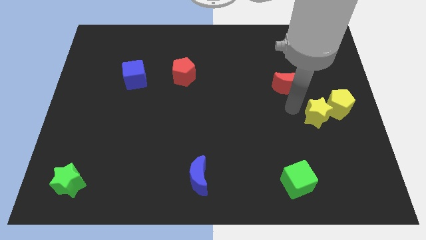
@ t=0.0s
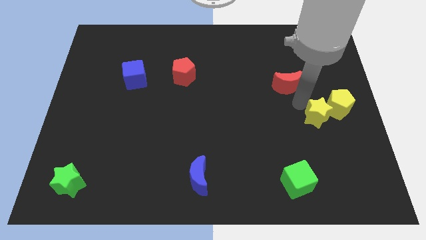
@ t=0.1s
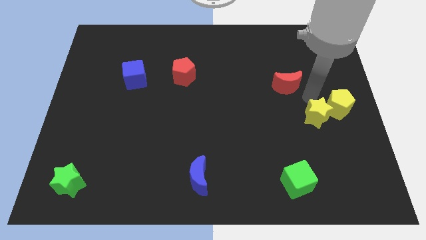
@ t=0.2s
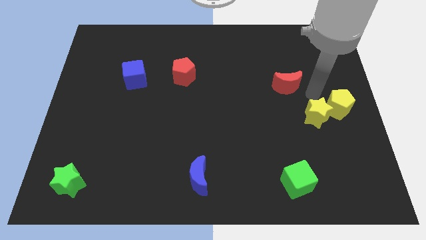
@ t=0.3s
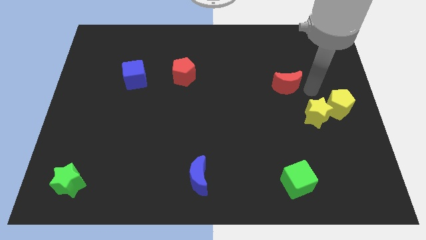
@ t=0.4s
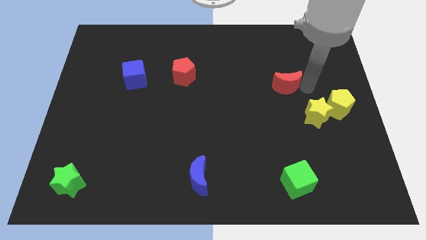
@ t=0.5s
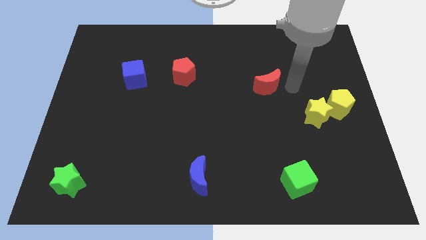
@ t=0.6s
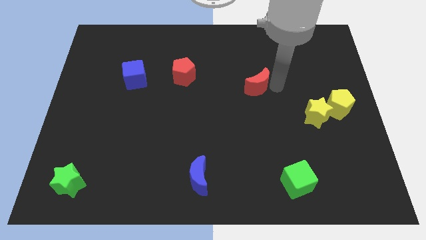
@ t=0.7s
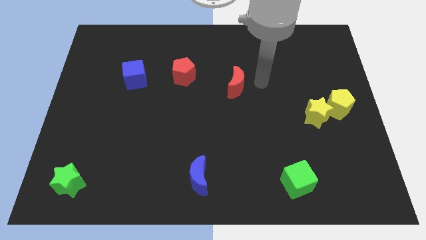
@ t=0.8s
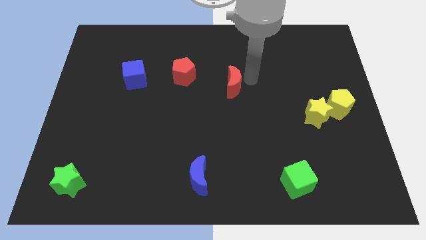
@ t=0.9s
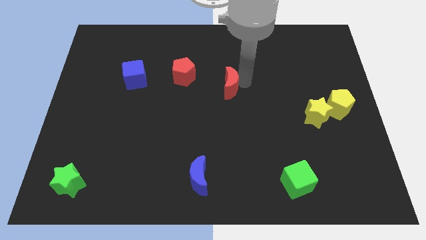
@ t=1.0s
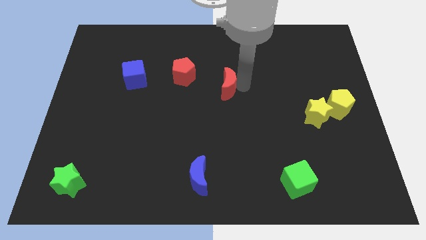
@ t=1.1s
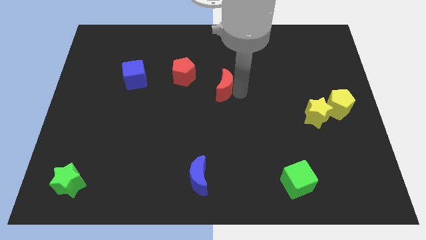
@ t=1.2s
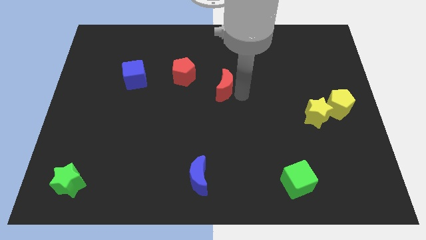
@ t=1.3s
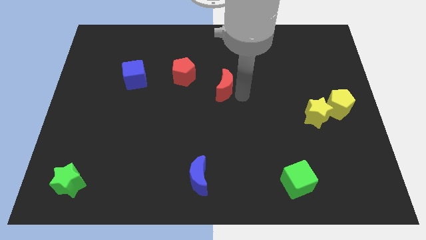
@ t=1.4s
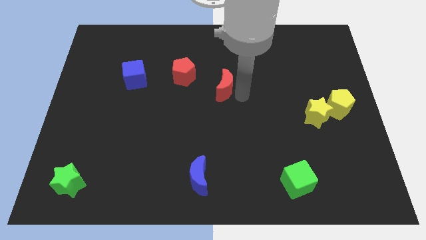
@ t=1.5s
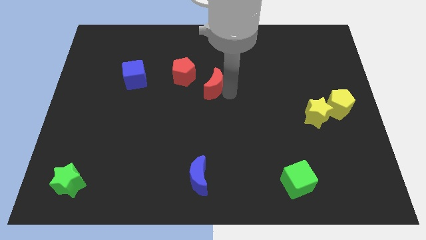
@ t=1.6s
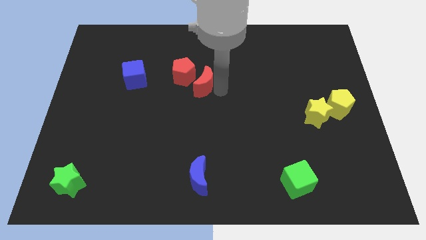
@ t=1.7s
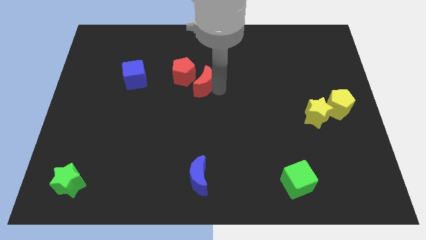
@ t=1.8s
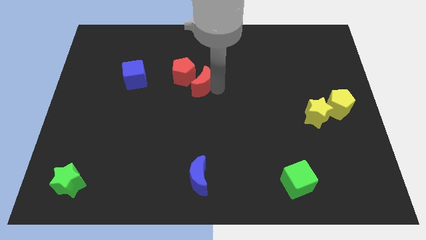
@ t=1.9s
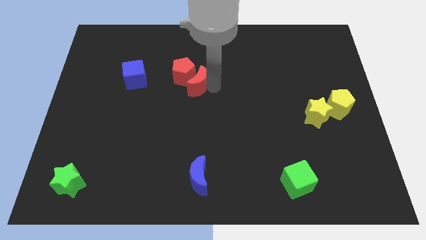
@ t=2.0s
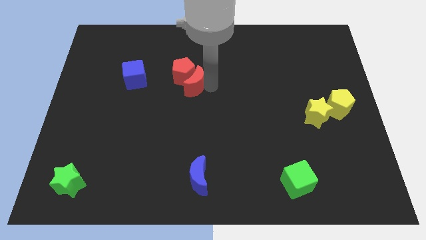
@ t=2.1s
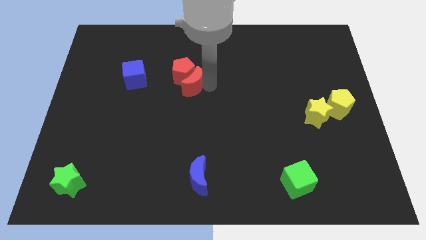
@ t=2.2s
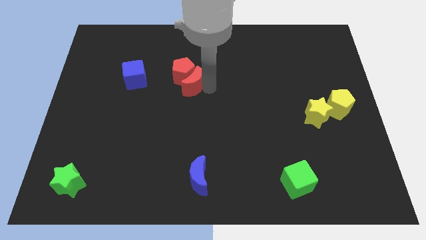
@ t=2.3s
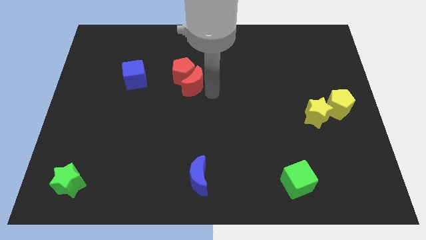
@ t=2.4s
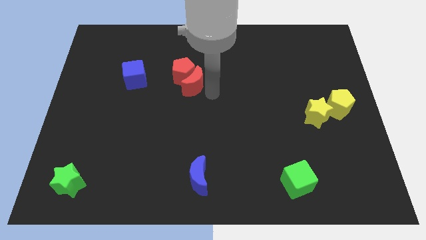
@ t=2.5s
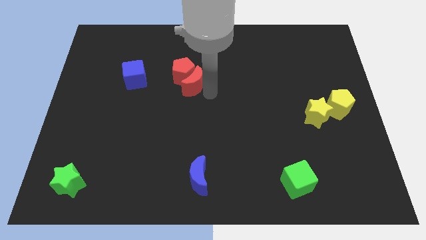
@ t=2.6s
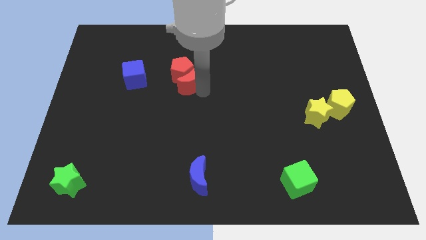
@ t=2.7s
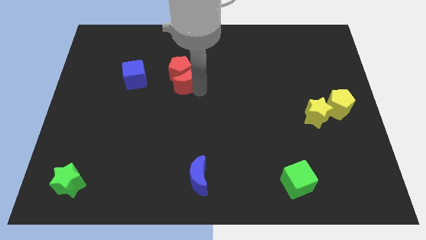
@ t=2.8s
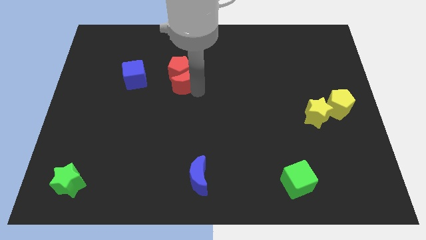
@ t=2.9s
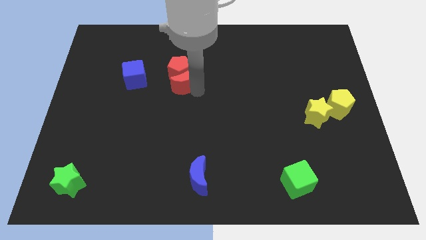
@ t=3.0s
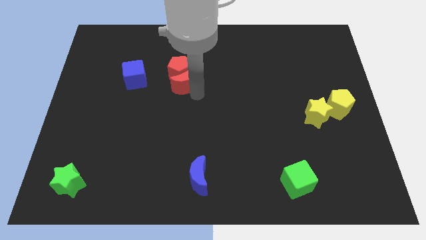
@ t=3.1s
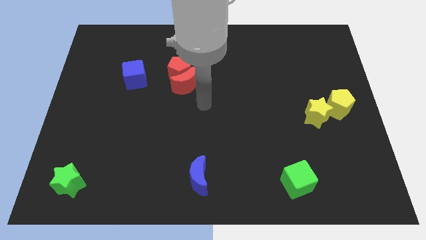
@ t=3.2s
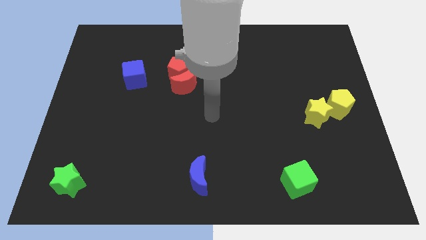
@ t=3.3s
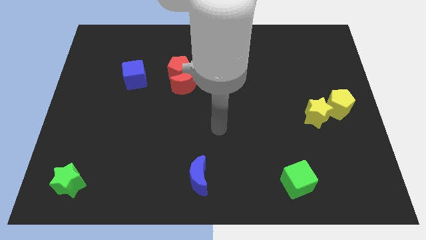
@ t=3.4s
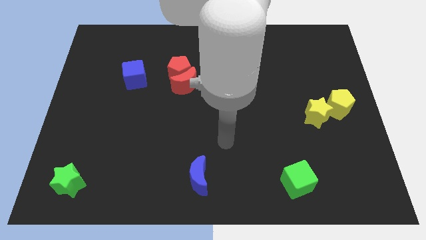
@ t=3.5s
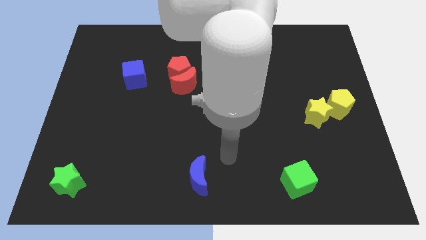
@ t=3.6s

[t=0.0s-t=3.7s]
place the red crescent below the red pentagon

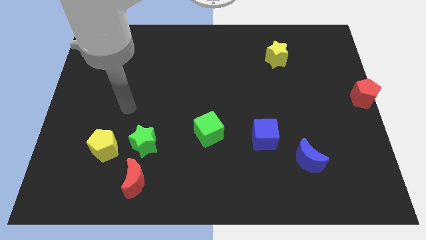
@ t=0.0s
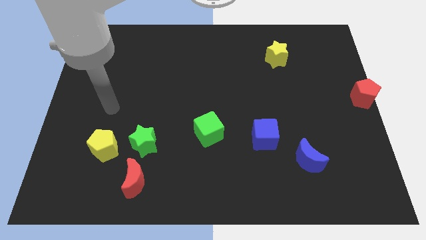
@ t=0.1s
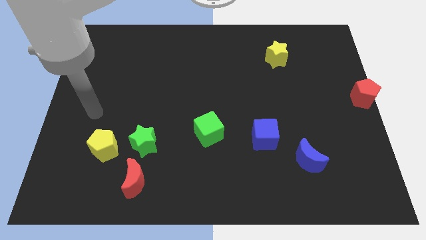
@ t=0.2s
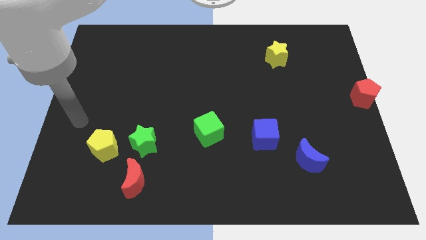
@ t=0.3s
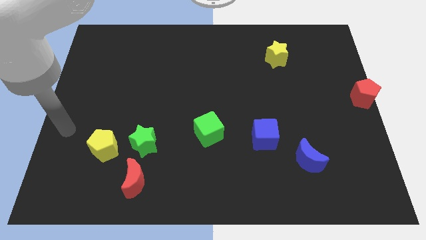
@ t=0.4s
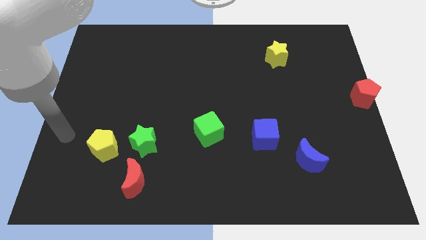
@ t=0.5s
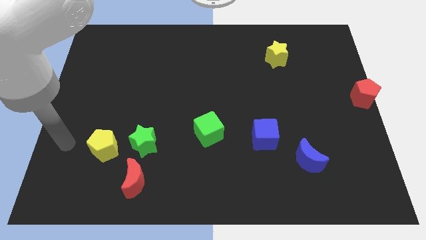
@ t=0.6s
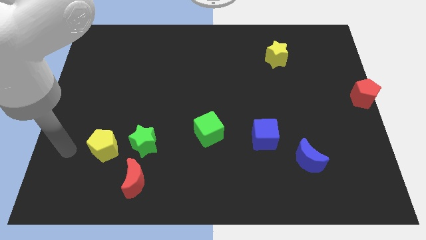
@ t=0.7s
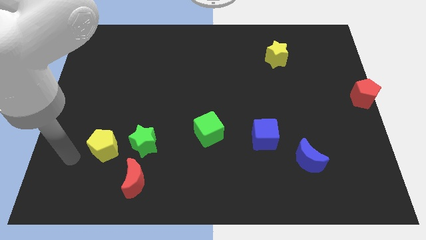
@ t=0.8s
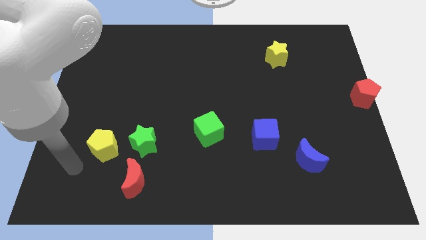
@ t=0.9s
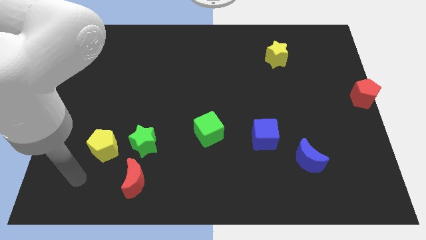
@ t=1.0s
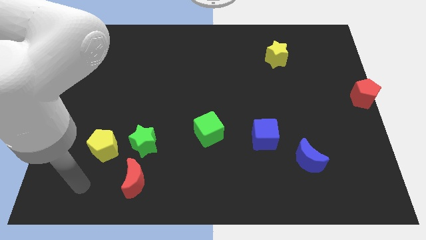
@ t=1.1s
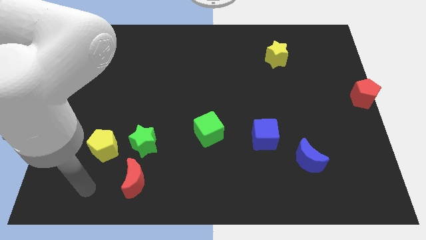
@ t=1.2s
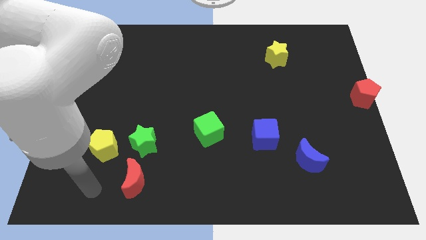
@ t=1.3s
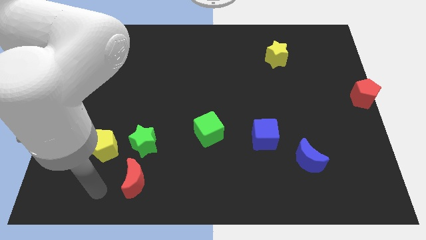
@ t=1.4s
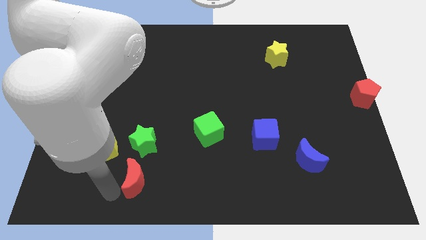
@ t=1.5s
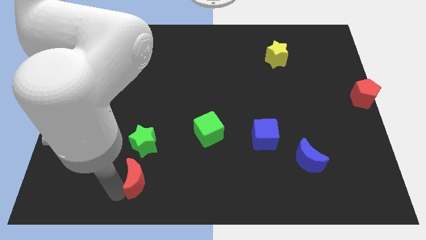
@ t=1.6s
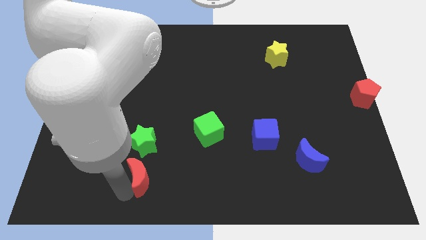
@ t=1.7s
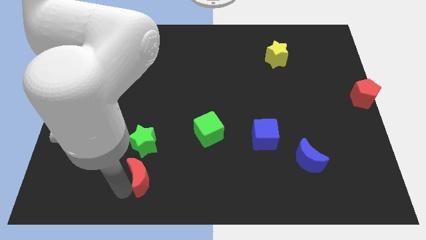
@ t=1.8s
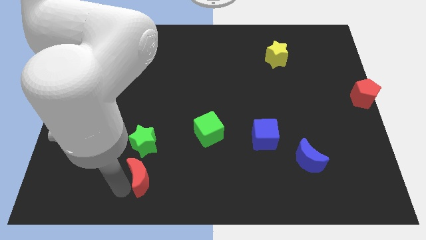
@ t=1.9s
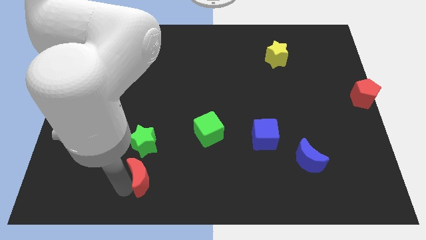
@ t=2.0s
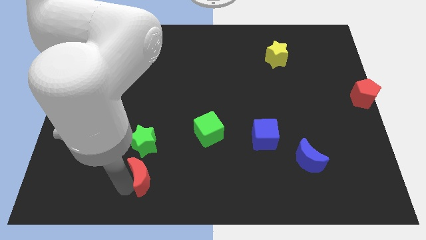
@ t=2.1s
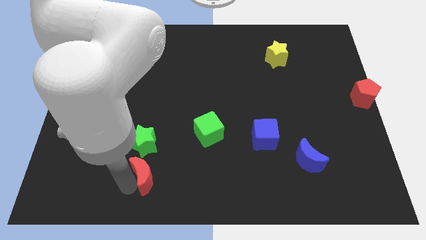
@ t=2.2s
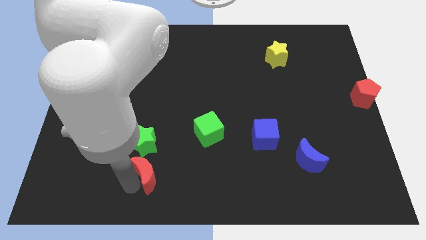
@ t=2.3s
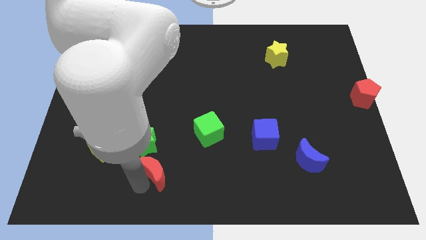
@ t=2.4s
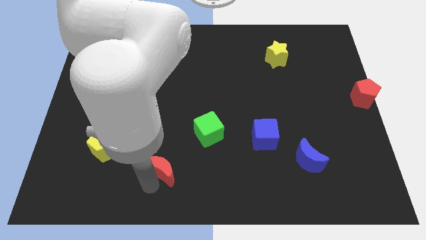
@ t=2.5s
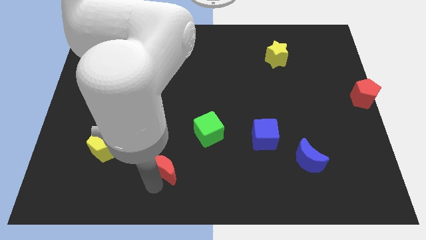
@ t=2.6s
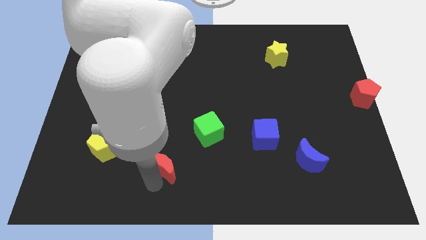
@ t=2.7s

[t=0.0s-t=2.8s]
push the red crescent to the bottom right of the green star

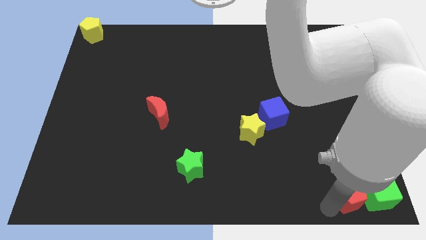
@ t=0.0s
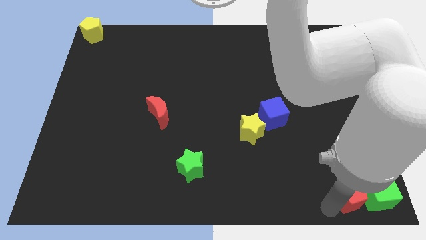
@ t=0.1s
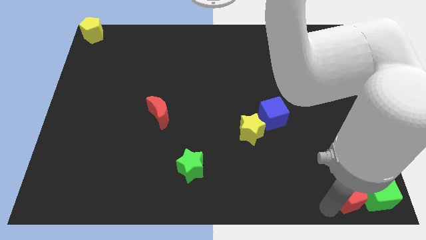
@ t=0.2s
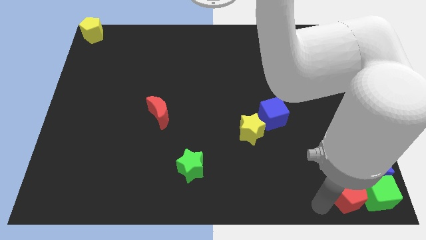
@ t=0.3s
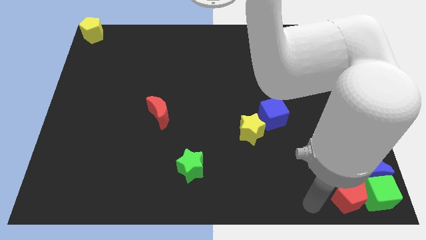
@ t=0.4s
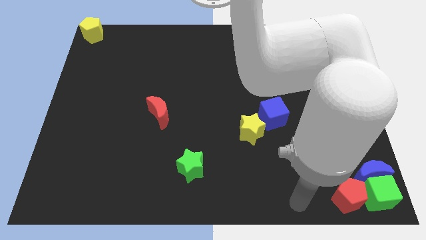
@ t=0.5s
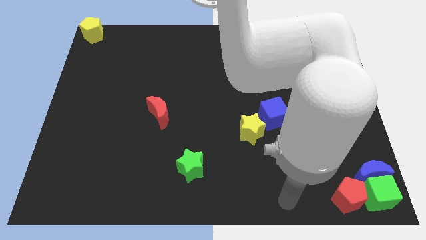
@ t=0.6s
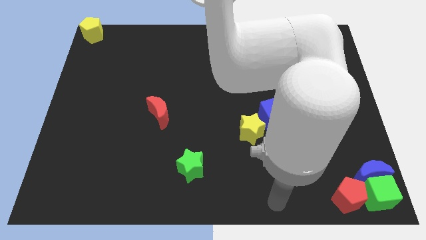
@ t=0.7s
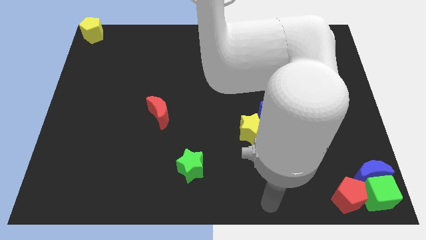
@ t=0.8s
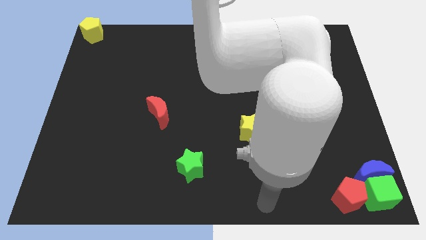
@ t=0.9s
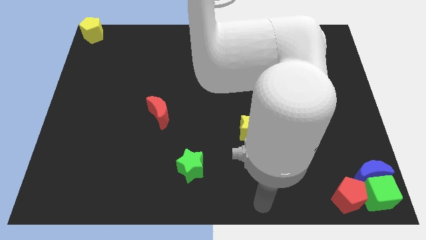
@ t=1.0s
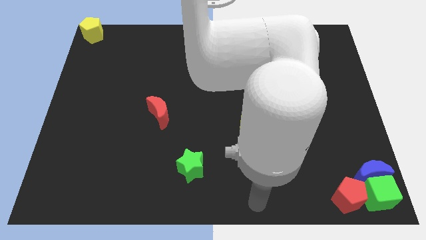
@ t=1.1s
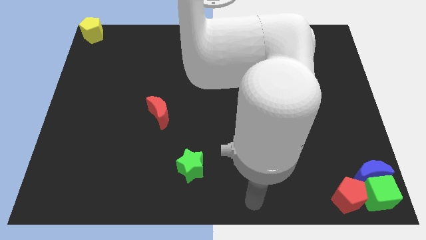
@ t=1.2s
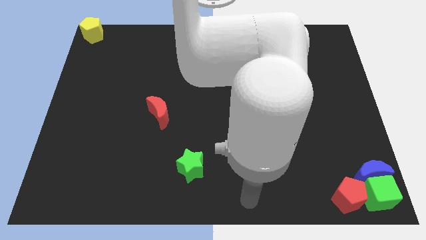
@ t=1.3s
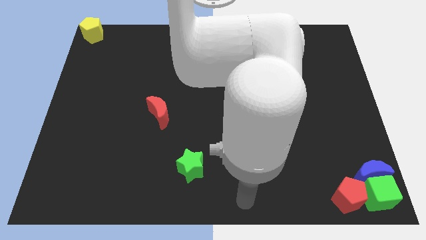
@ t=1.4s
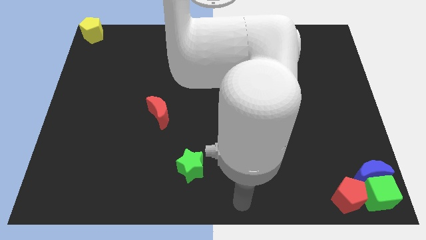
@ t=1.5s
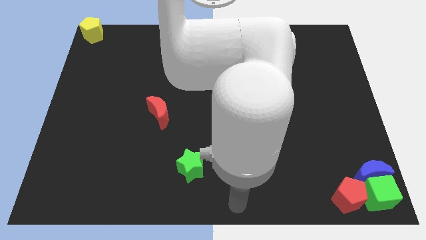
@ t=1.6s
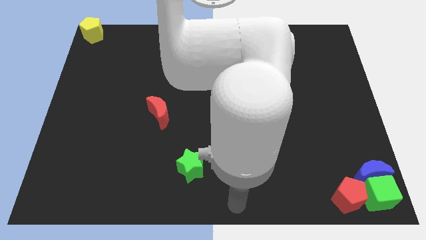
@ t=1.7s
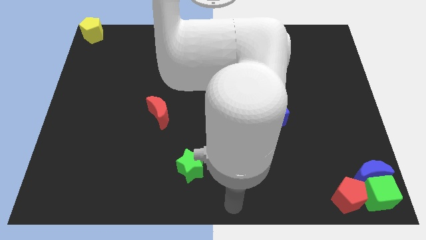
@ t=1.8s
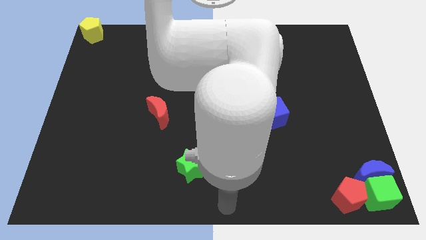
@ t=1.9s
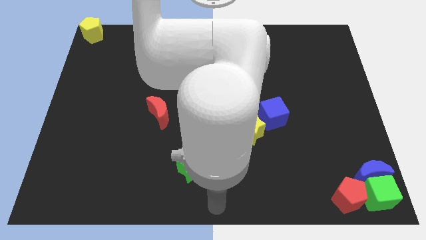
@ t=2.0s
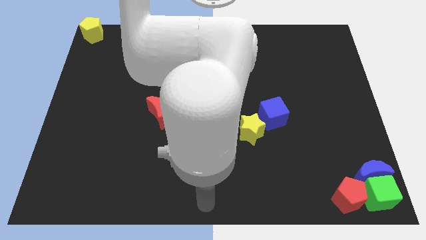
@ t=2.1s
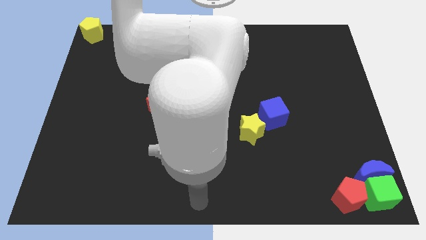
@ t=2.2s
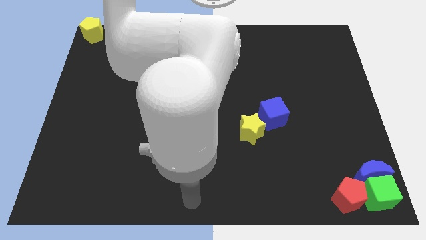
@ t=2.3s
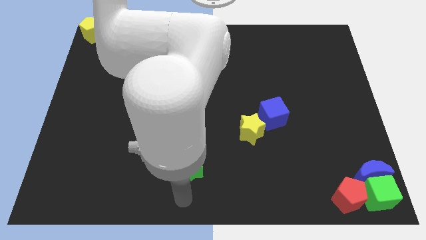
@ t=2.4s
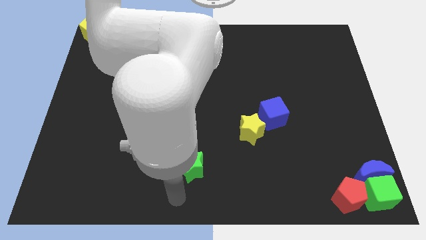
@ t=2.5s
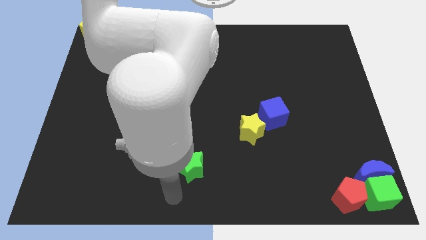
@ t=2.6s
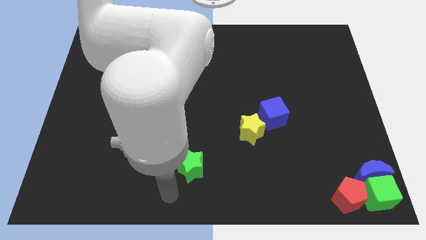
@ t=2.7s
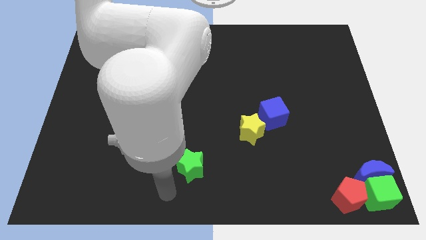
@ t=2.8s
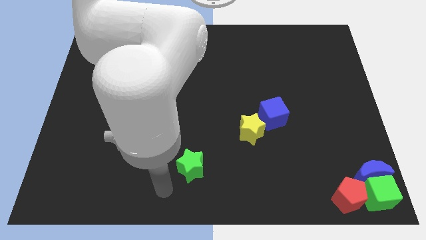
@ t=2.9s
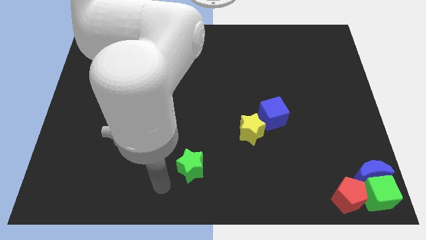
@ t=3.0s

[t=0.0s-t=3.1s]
move arm away from red pentagon
